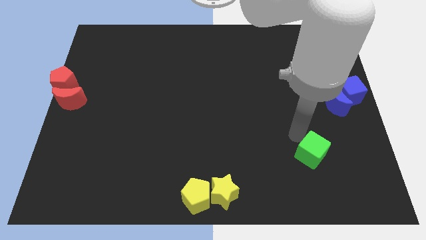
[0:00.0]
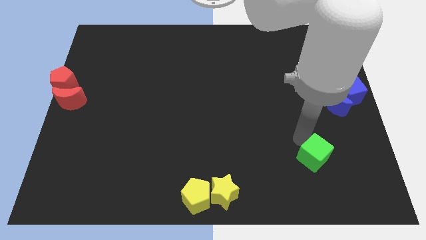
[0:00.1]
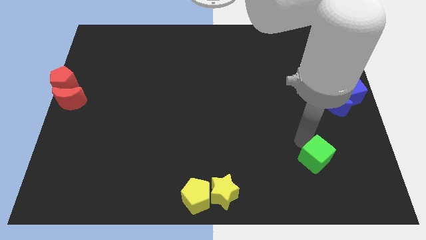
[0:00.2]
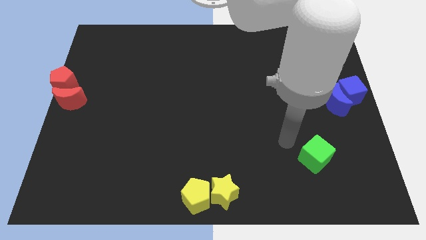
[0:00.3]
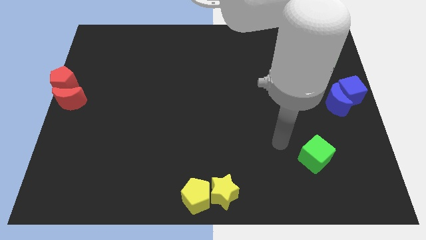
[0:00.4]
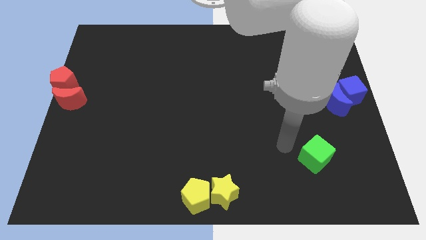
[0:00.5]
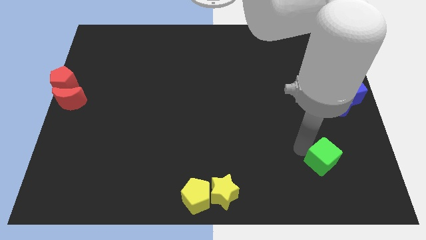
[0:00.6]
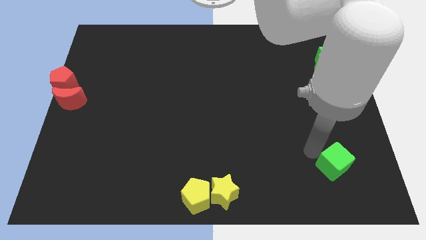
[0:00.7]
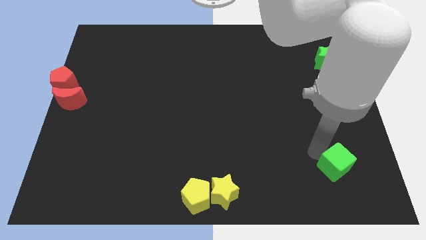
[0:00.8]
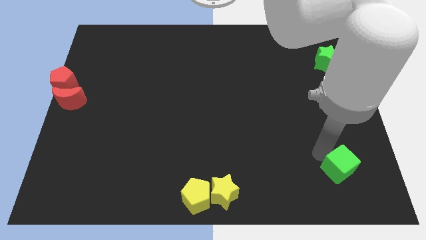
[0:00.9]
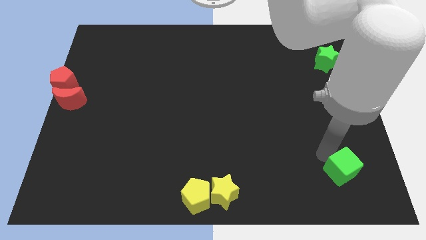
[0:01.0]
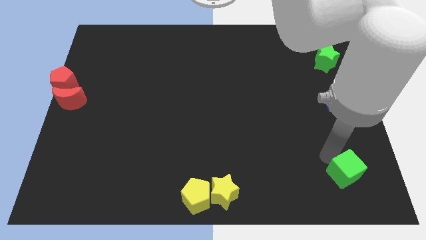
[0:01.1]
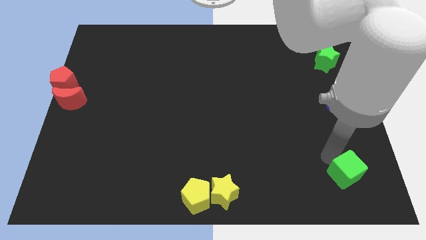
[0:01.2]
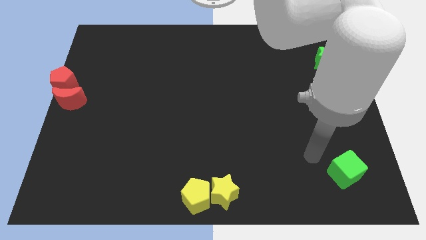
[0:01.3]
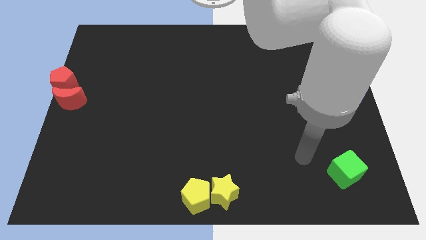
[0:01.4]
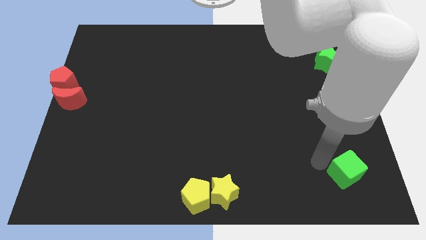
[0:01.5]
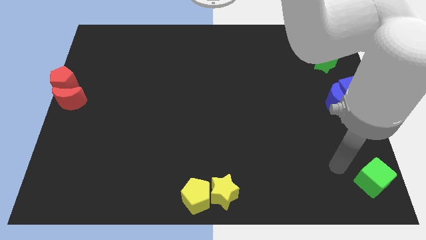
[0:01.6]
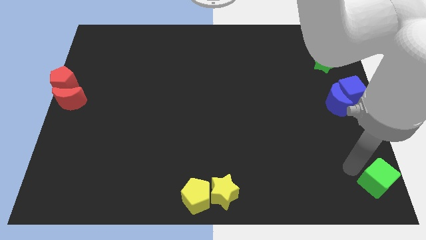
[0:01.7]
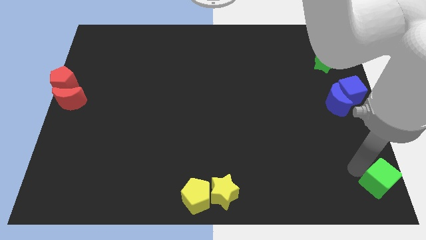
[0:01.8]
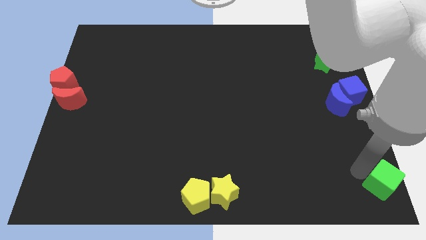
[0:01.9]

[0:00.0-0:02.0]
place the green cube to the bottom right

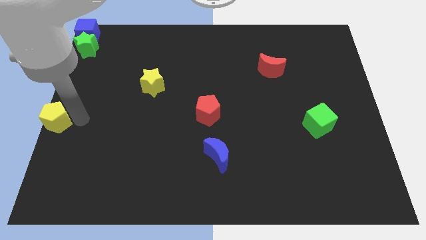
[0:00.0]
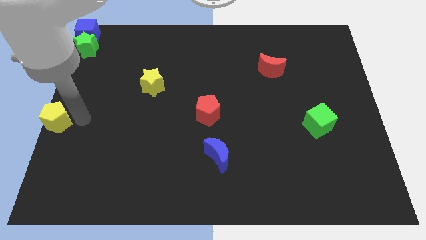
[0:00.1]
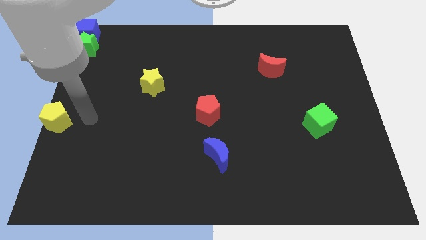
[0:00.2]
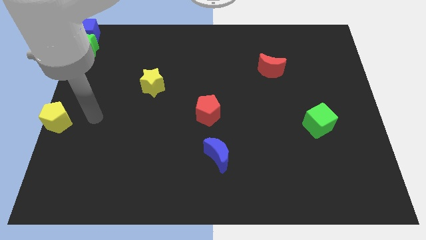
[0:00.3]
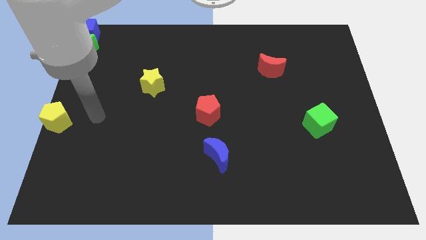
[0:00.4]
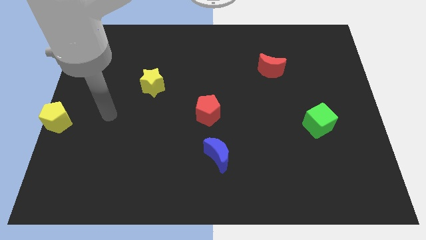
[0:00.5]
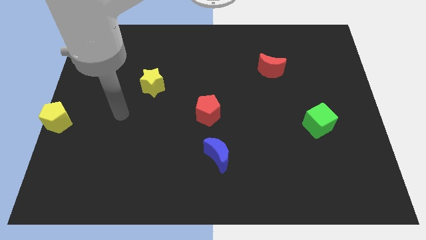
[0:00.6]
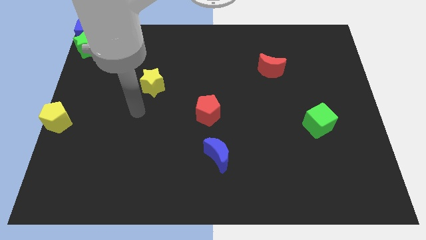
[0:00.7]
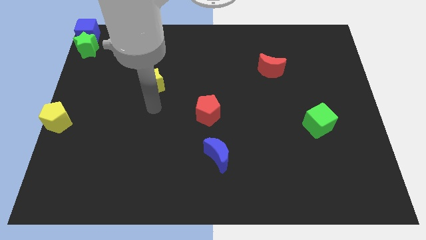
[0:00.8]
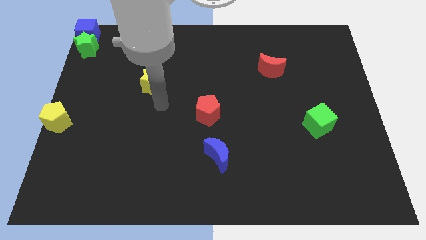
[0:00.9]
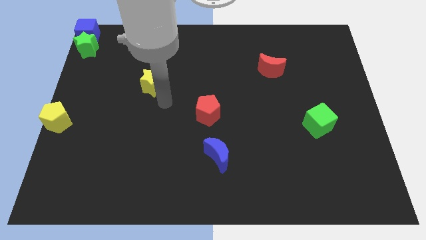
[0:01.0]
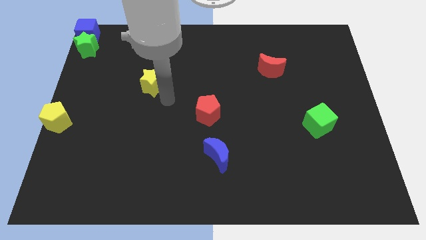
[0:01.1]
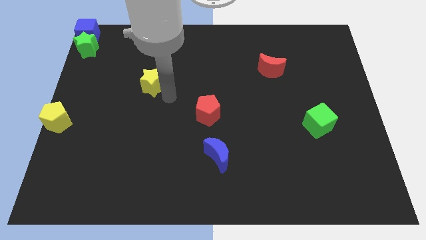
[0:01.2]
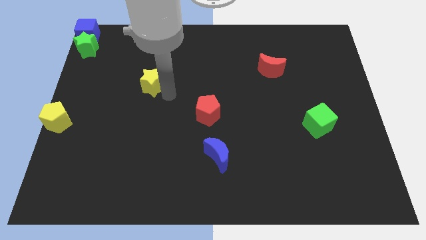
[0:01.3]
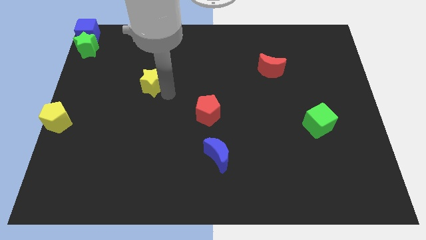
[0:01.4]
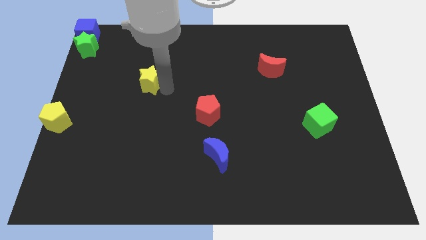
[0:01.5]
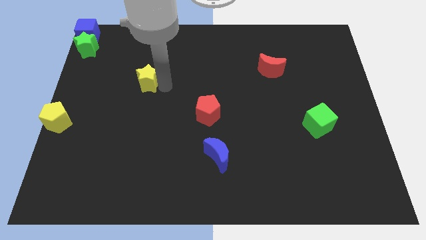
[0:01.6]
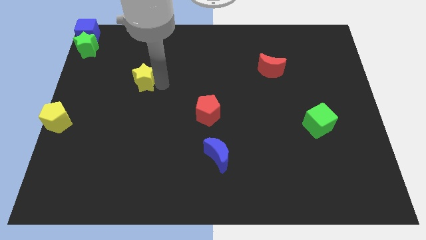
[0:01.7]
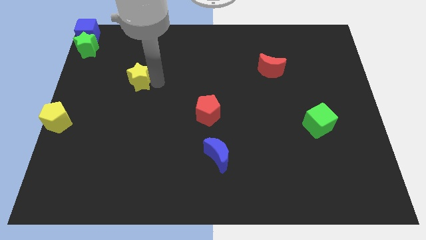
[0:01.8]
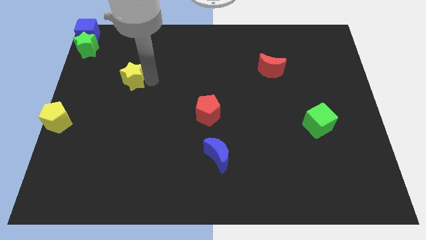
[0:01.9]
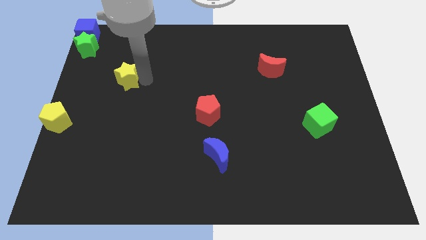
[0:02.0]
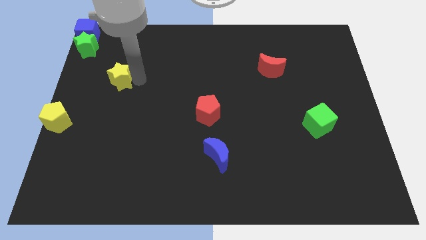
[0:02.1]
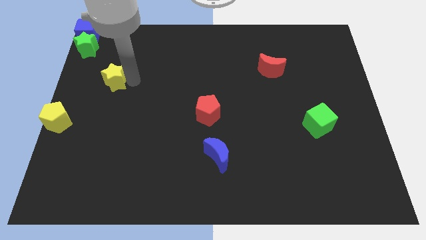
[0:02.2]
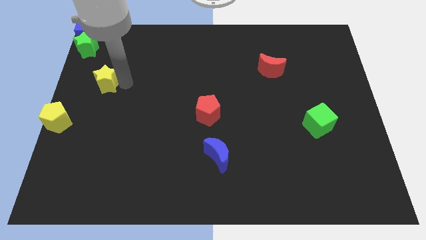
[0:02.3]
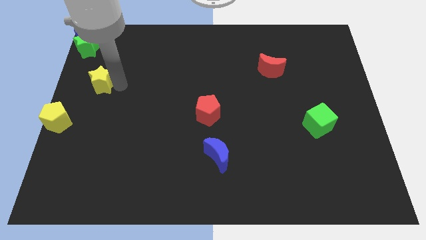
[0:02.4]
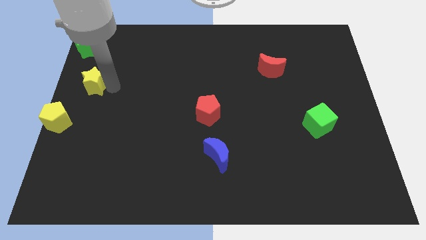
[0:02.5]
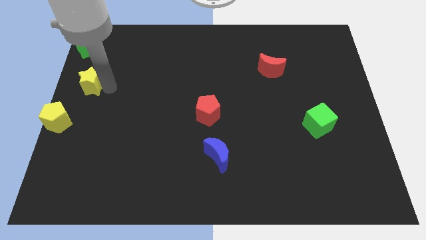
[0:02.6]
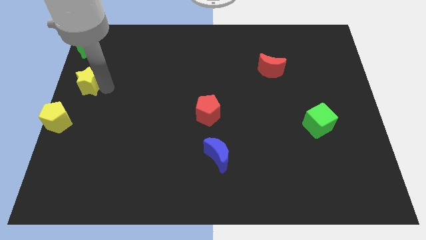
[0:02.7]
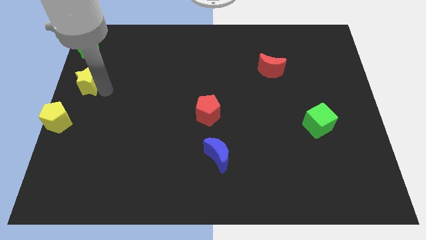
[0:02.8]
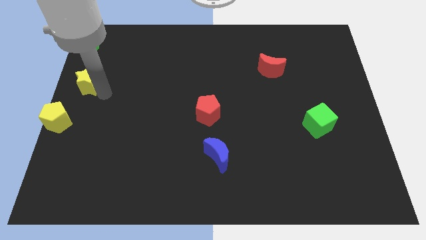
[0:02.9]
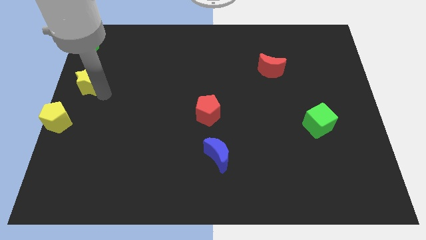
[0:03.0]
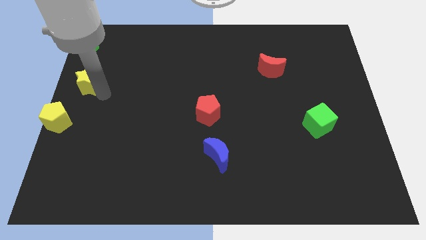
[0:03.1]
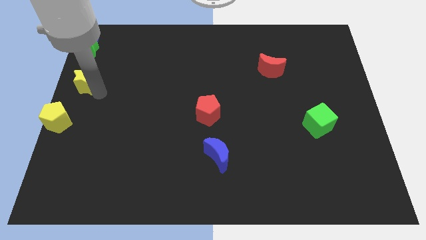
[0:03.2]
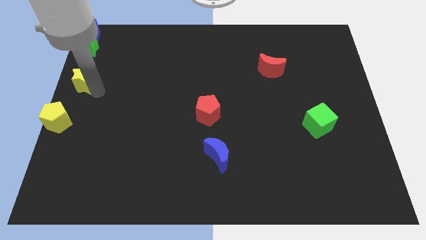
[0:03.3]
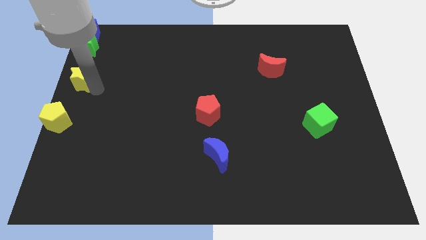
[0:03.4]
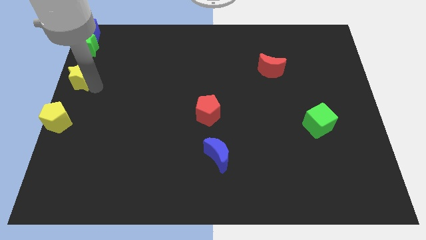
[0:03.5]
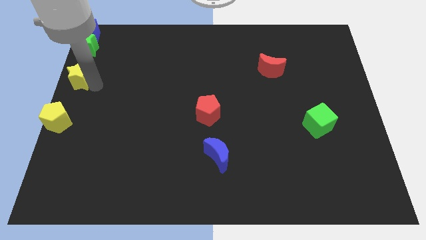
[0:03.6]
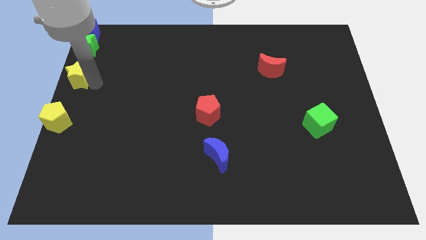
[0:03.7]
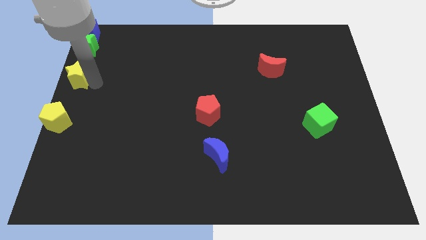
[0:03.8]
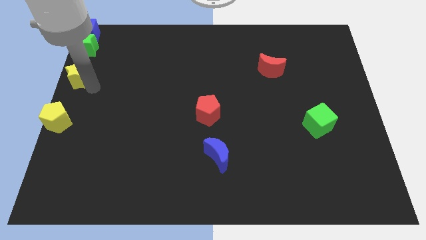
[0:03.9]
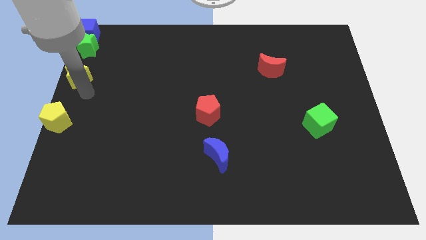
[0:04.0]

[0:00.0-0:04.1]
put the yellow star below the green star

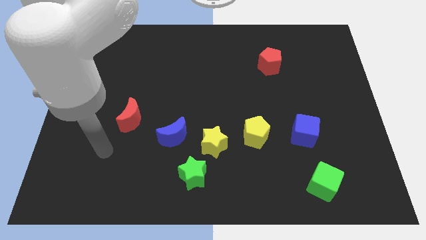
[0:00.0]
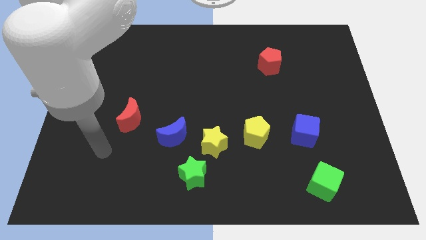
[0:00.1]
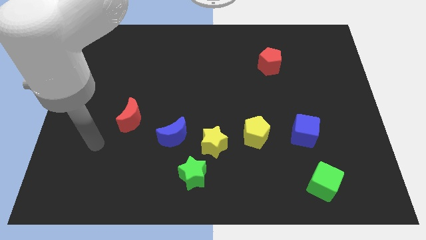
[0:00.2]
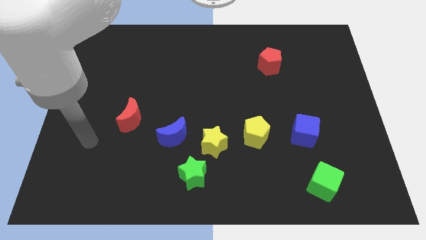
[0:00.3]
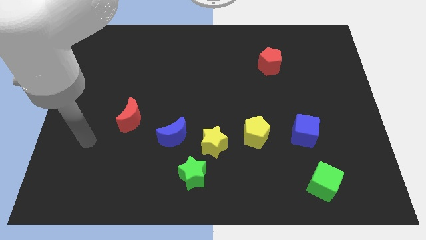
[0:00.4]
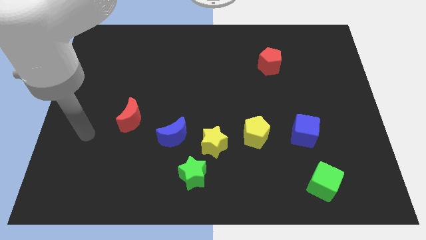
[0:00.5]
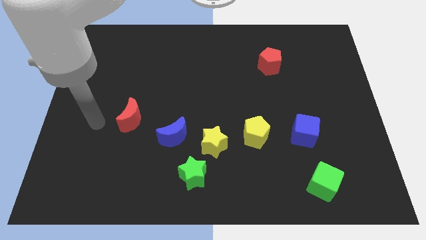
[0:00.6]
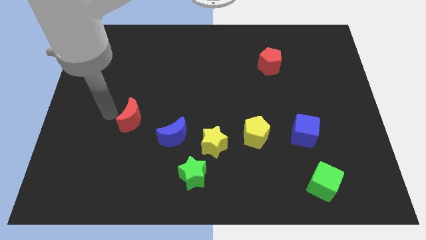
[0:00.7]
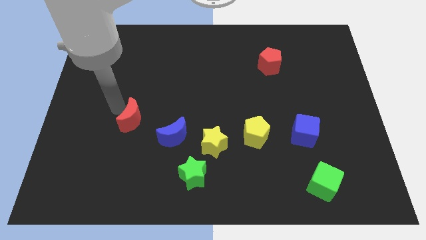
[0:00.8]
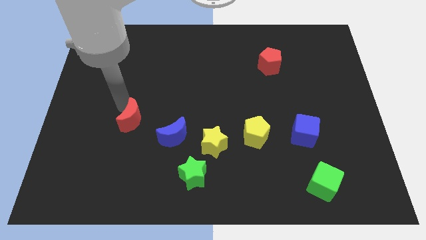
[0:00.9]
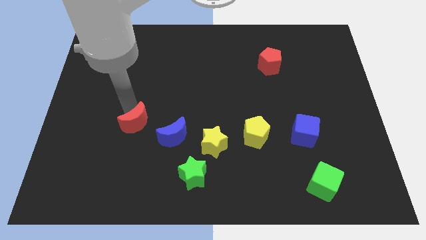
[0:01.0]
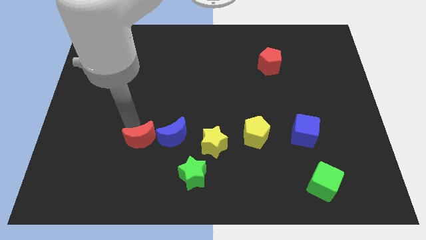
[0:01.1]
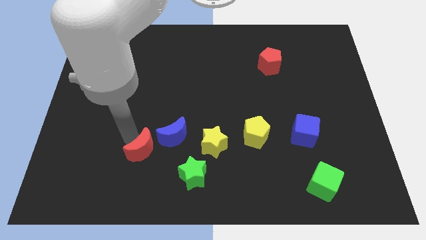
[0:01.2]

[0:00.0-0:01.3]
push the red crescent to the left of the blue crescent

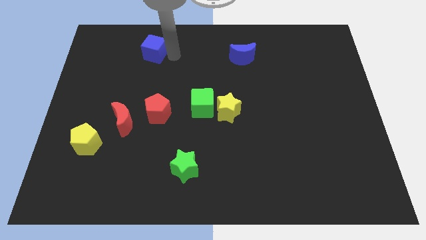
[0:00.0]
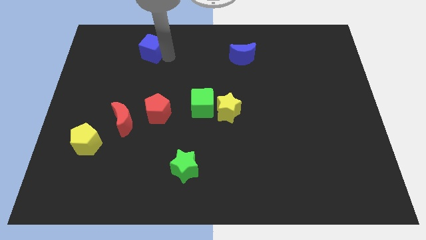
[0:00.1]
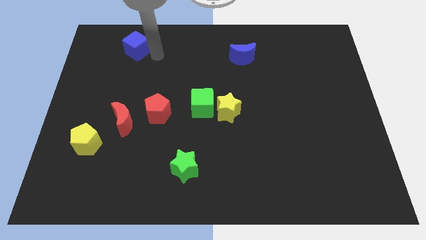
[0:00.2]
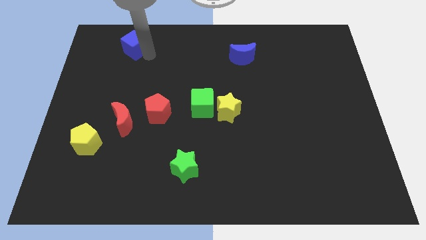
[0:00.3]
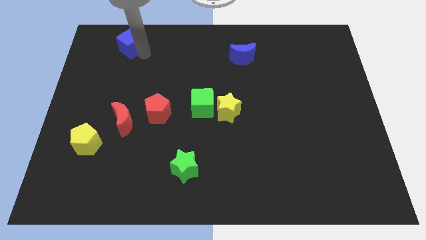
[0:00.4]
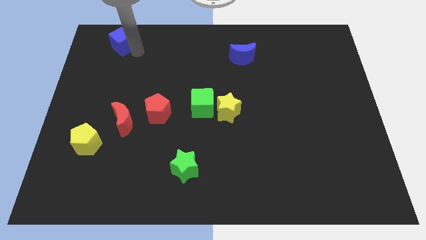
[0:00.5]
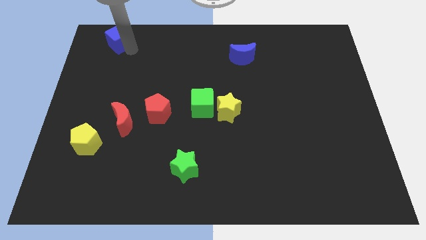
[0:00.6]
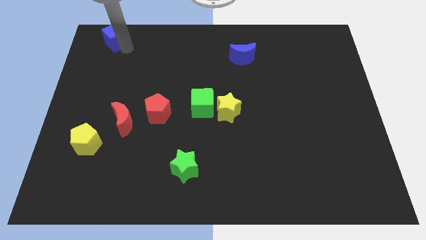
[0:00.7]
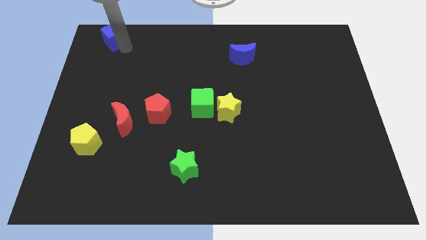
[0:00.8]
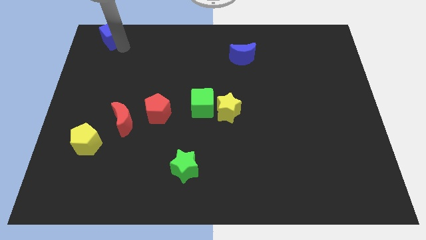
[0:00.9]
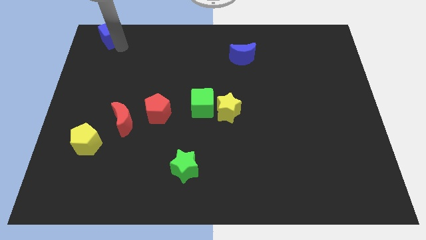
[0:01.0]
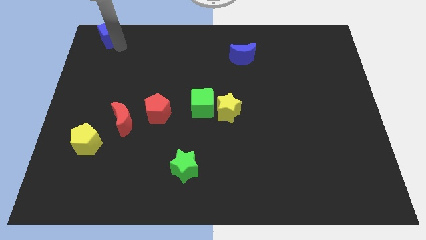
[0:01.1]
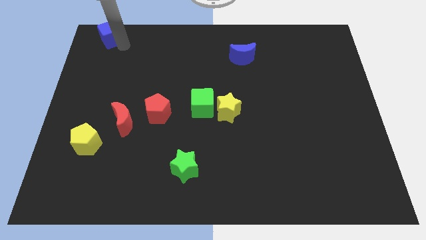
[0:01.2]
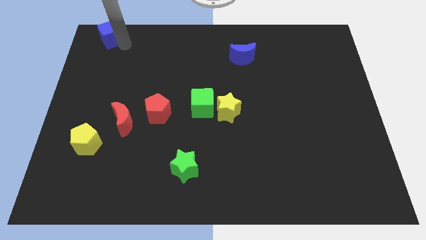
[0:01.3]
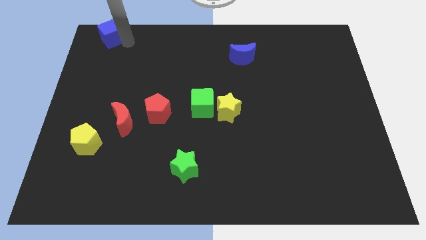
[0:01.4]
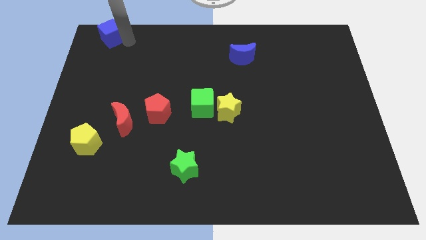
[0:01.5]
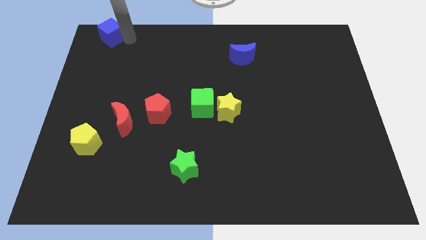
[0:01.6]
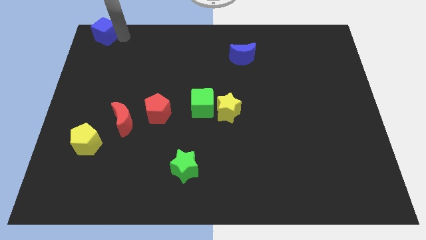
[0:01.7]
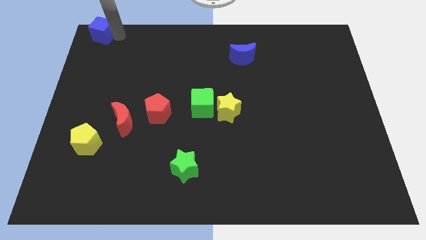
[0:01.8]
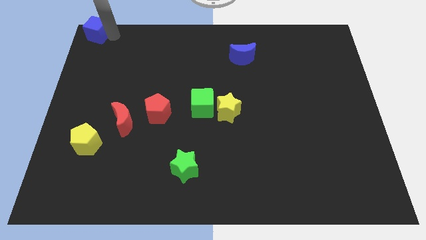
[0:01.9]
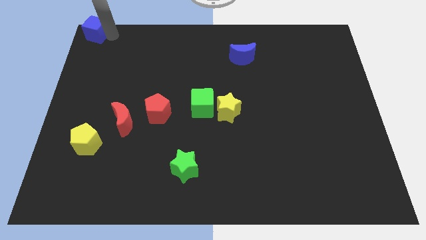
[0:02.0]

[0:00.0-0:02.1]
push the blue cube to the top left of the board
